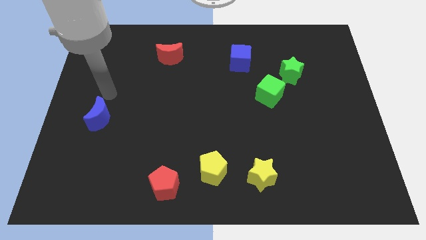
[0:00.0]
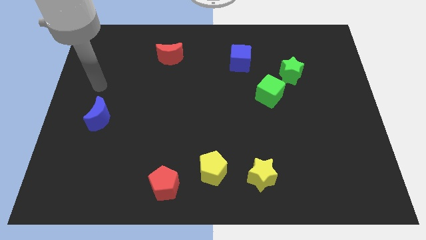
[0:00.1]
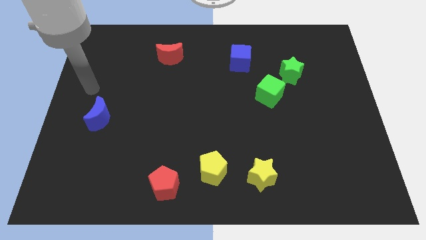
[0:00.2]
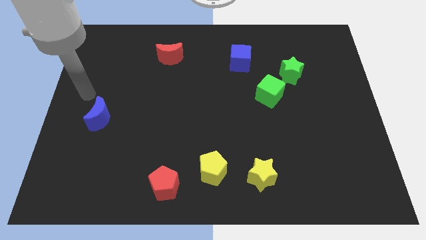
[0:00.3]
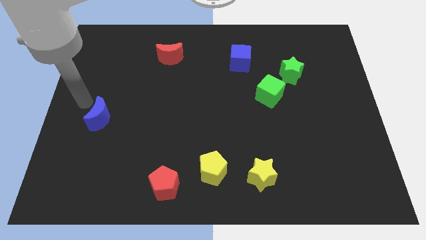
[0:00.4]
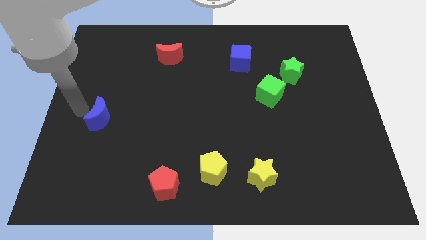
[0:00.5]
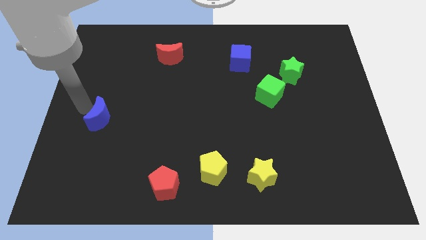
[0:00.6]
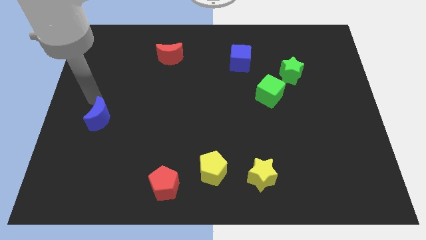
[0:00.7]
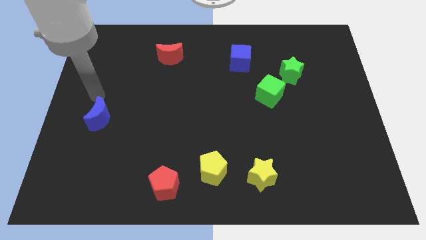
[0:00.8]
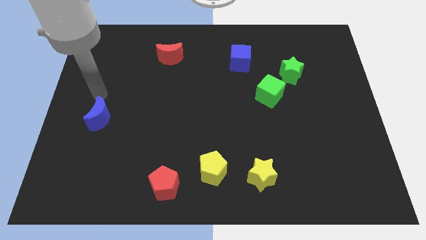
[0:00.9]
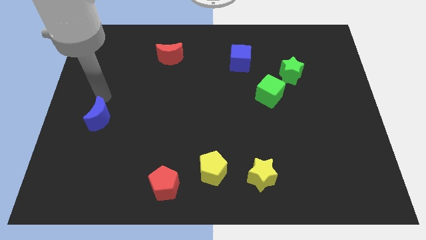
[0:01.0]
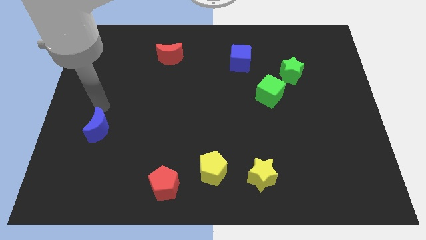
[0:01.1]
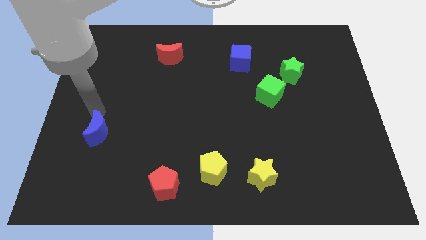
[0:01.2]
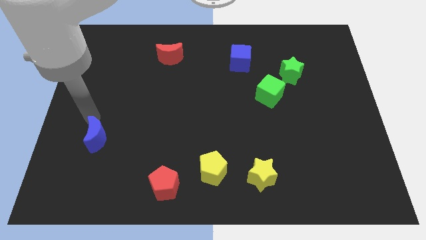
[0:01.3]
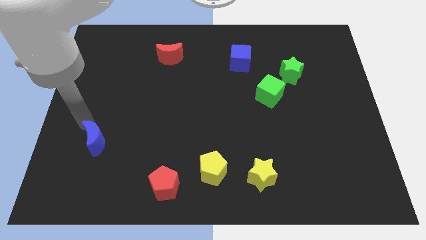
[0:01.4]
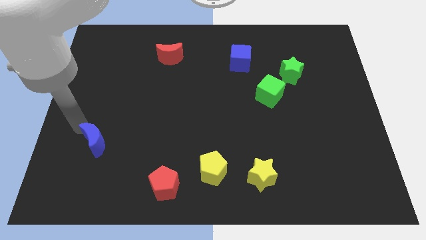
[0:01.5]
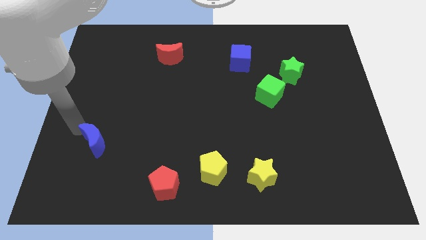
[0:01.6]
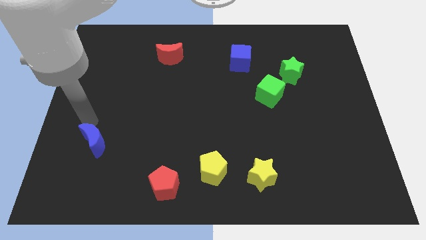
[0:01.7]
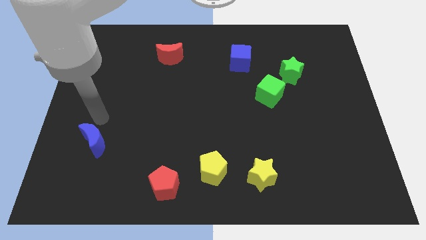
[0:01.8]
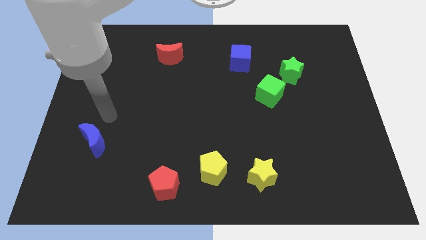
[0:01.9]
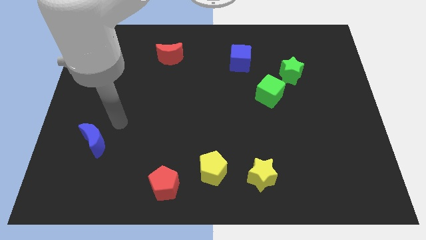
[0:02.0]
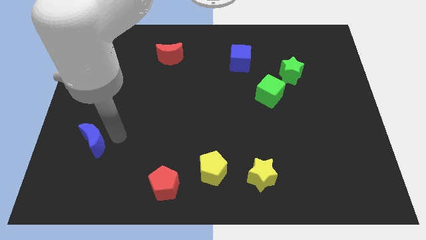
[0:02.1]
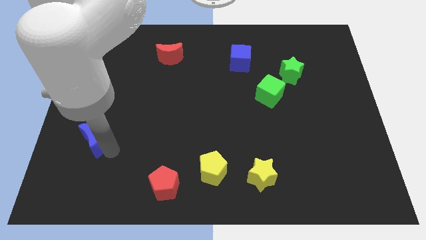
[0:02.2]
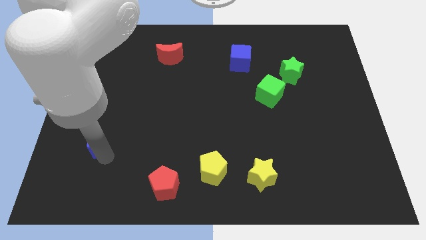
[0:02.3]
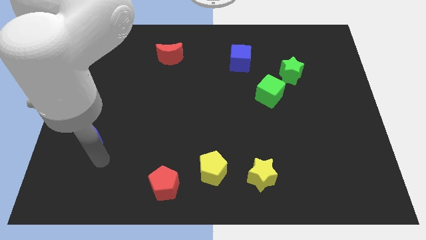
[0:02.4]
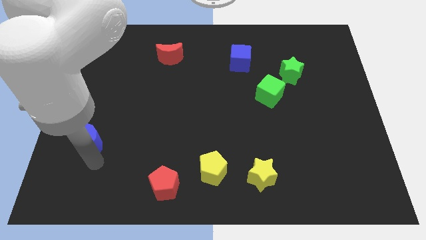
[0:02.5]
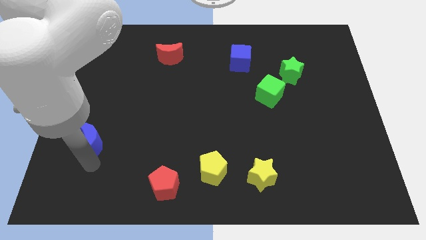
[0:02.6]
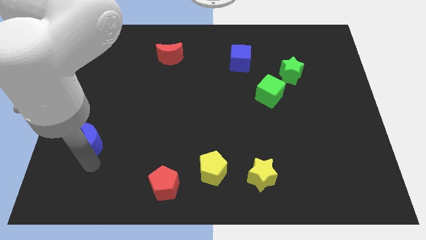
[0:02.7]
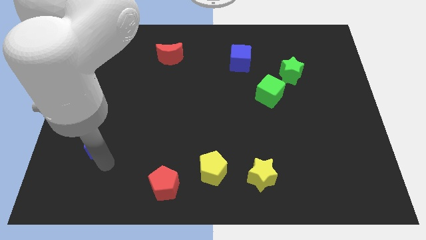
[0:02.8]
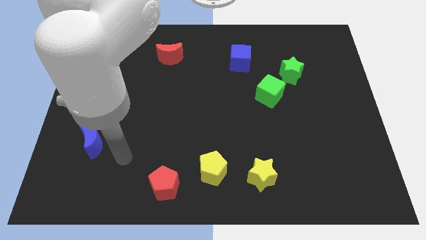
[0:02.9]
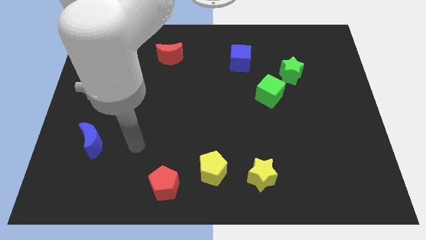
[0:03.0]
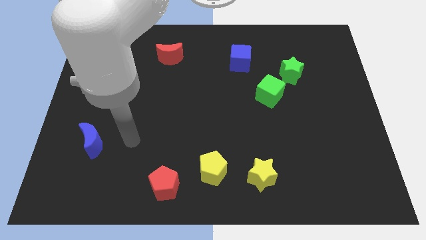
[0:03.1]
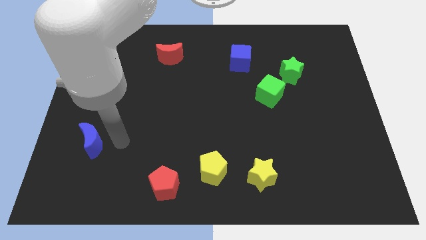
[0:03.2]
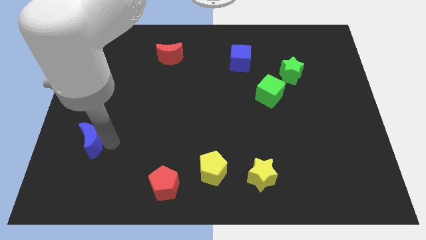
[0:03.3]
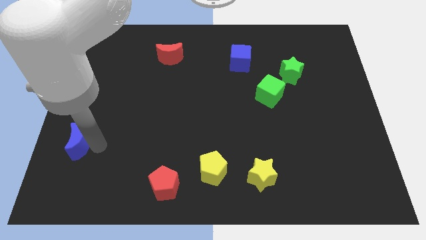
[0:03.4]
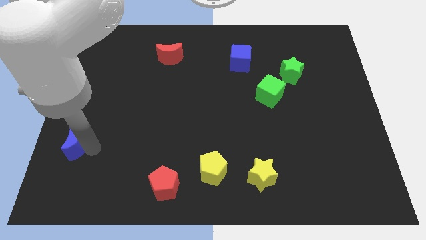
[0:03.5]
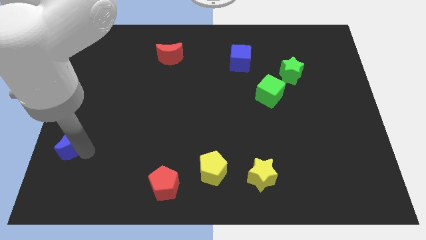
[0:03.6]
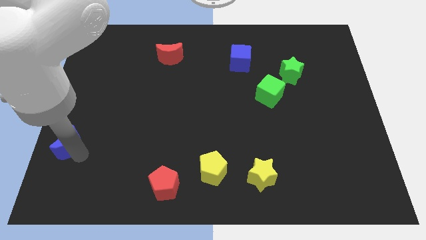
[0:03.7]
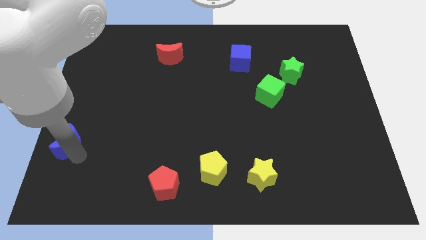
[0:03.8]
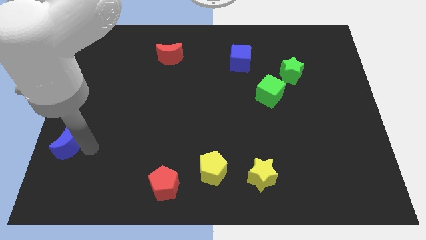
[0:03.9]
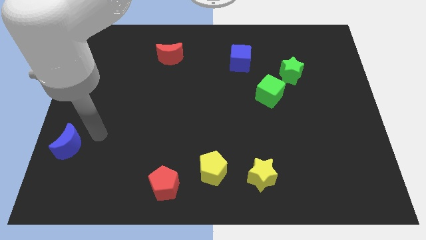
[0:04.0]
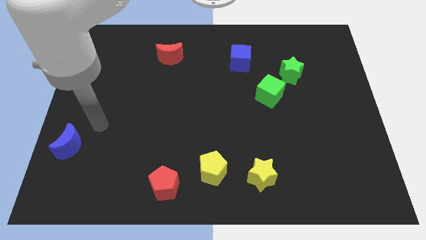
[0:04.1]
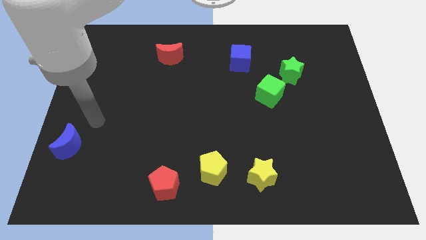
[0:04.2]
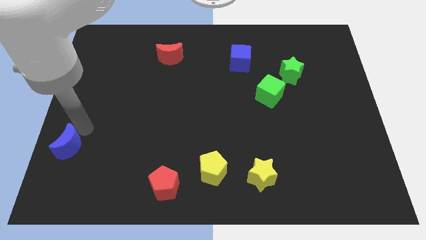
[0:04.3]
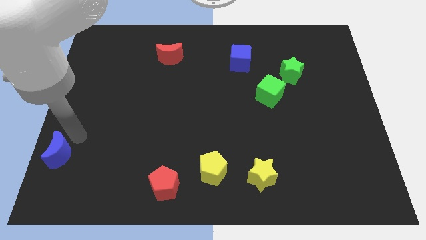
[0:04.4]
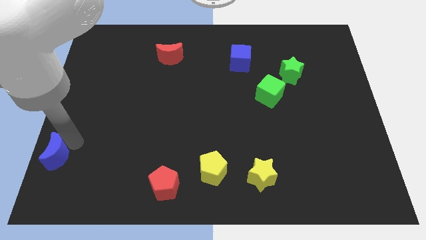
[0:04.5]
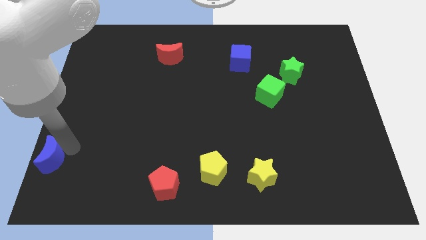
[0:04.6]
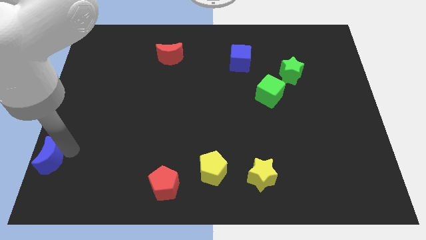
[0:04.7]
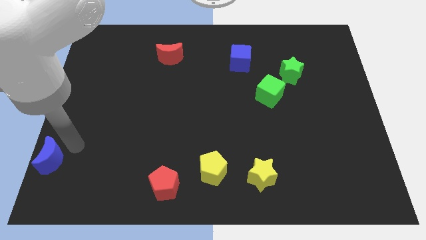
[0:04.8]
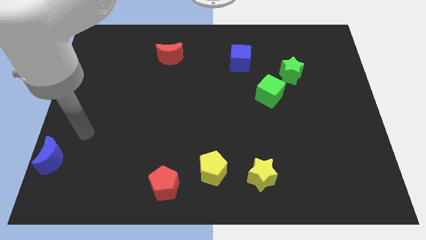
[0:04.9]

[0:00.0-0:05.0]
move the blue crescent towards the bottom left

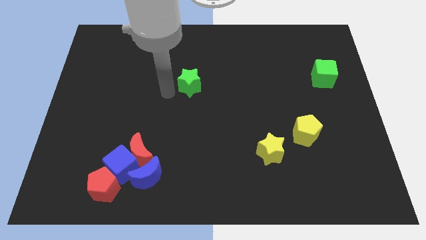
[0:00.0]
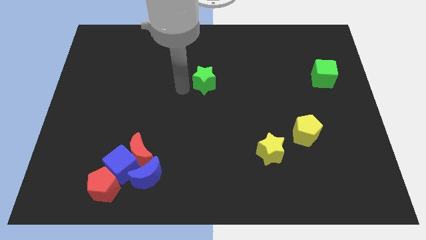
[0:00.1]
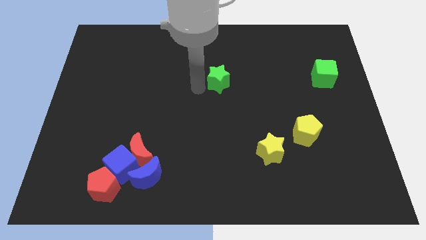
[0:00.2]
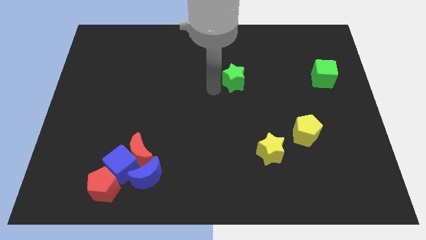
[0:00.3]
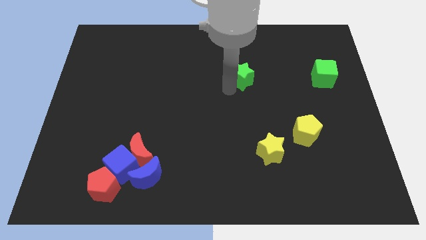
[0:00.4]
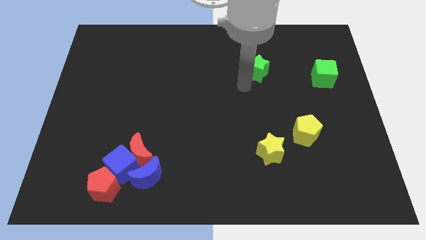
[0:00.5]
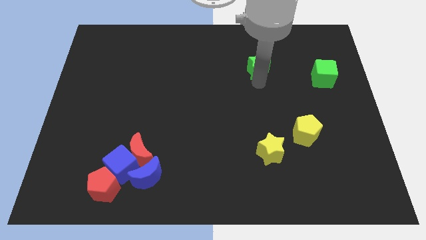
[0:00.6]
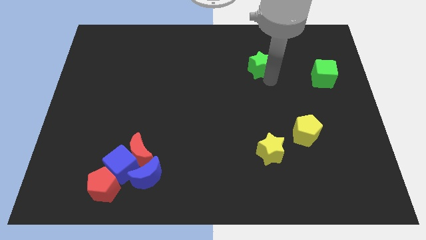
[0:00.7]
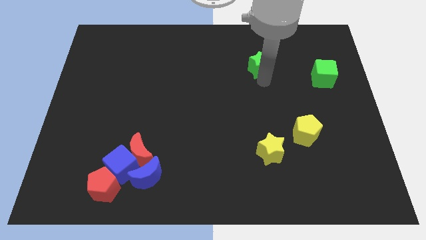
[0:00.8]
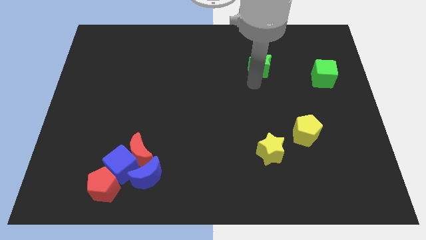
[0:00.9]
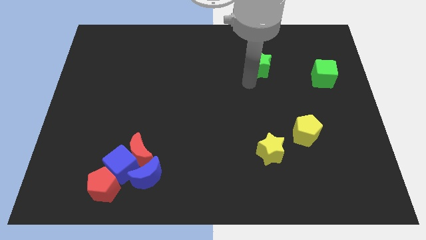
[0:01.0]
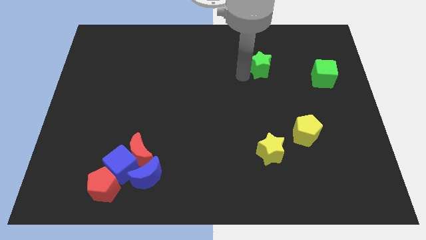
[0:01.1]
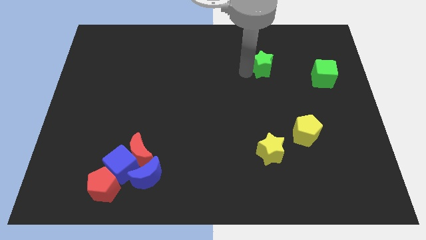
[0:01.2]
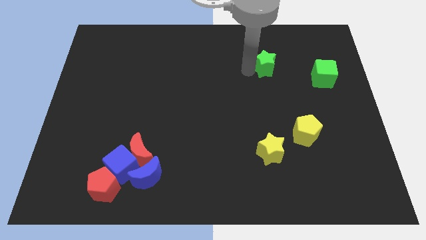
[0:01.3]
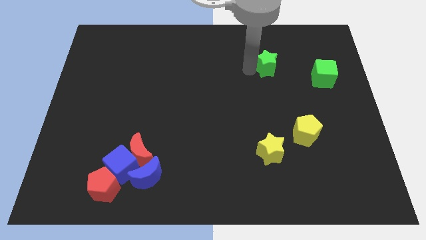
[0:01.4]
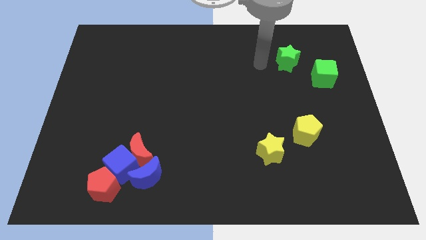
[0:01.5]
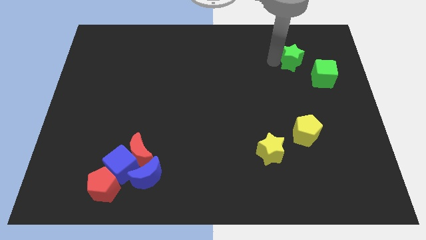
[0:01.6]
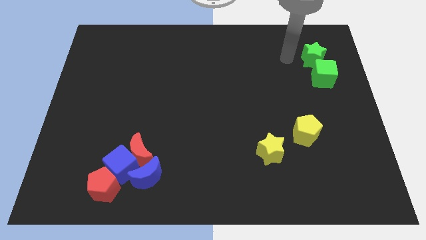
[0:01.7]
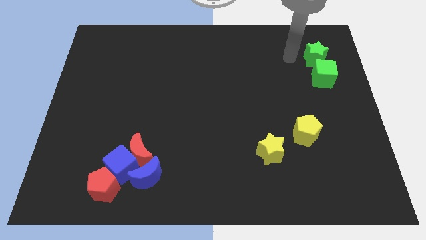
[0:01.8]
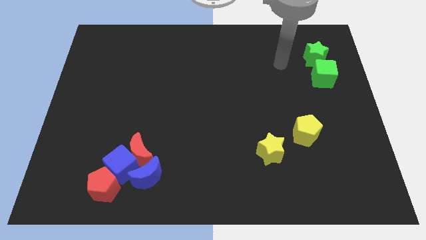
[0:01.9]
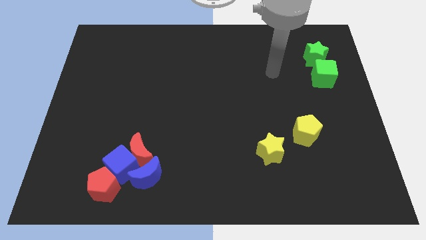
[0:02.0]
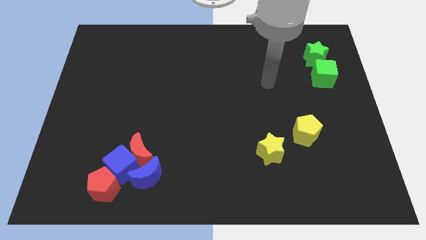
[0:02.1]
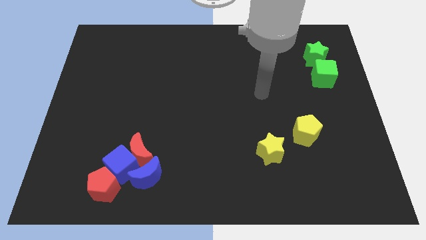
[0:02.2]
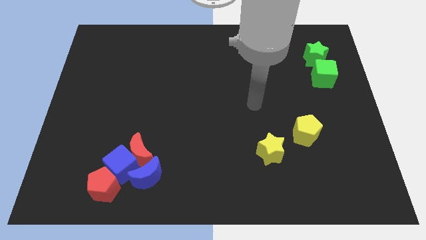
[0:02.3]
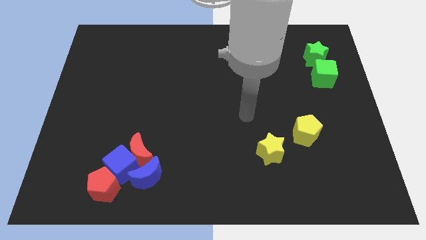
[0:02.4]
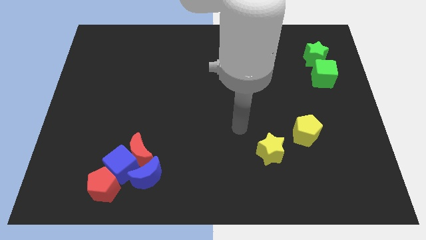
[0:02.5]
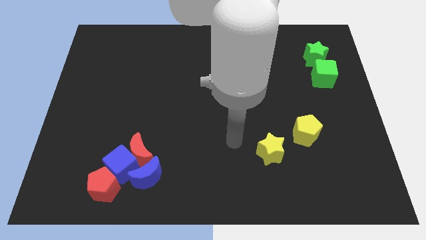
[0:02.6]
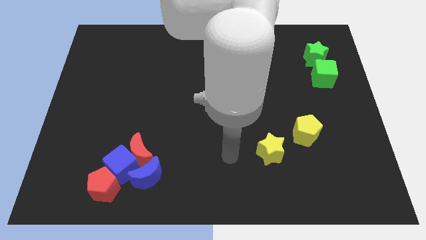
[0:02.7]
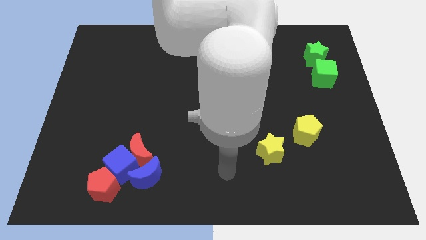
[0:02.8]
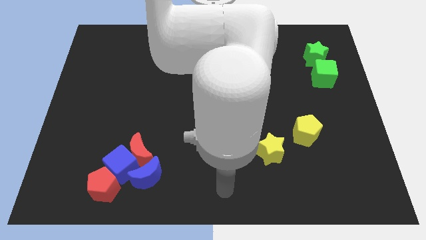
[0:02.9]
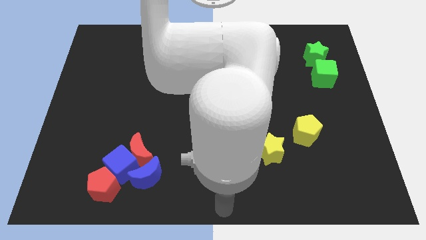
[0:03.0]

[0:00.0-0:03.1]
place the green star above the green cube

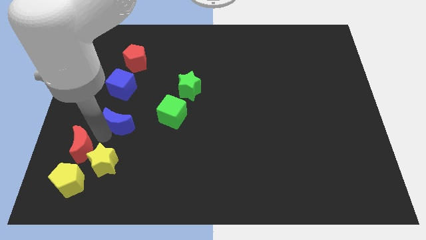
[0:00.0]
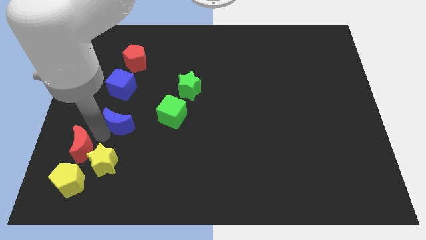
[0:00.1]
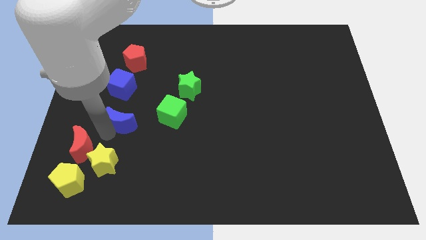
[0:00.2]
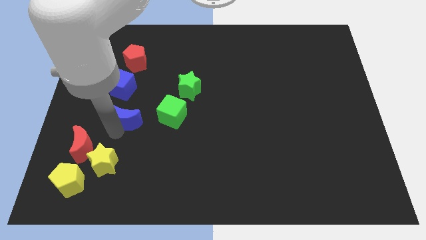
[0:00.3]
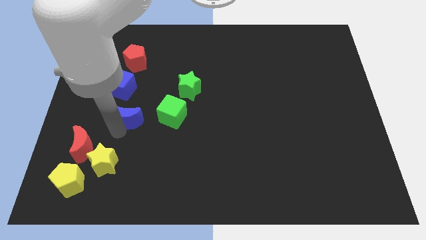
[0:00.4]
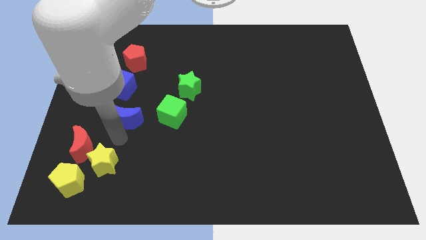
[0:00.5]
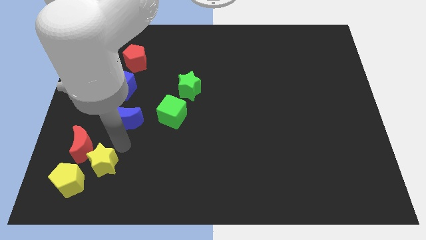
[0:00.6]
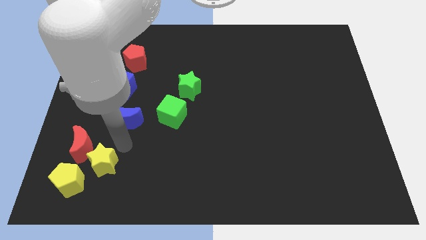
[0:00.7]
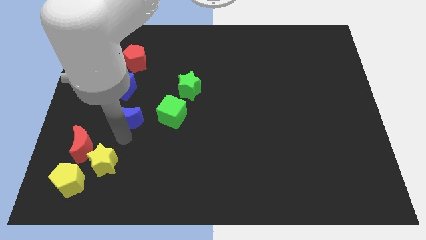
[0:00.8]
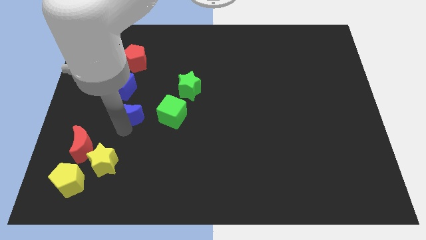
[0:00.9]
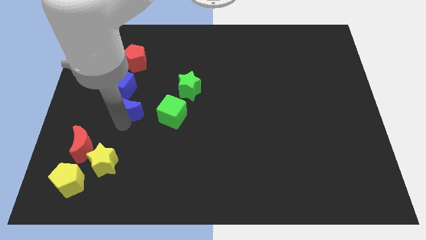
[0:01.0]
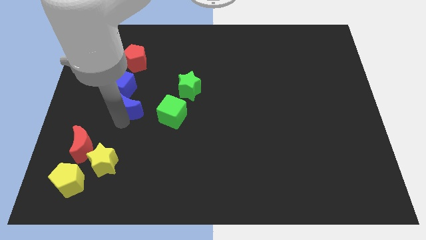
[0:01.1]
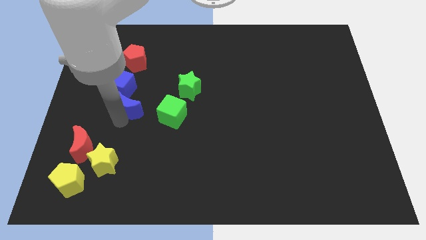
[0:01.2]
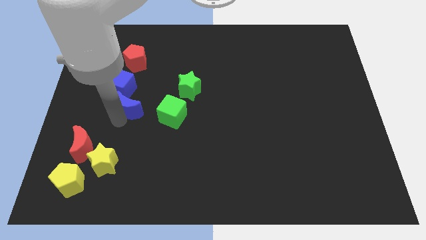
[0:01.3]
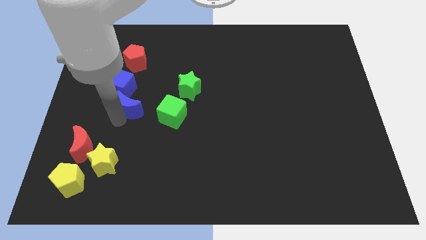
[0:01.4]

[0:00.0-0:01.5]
slide the blue moon to the bottom right side of the blue cube
